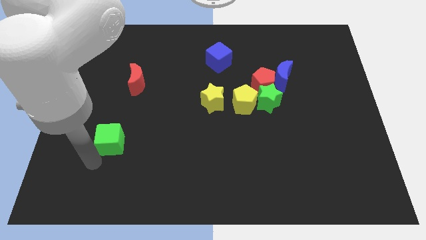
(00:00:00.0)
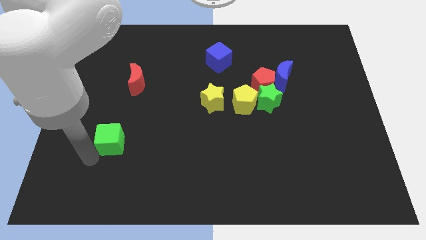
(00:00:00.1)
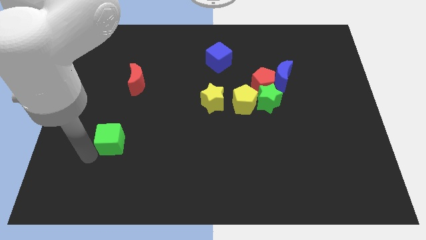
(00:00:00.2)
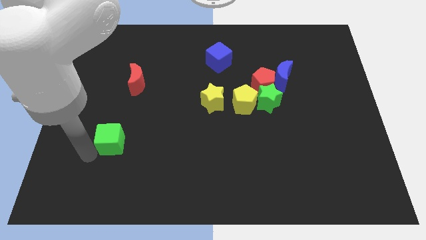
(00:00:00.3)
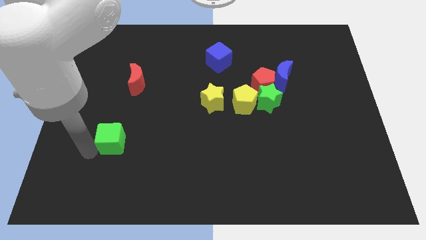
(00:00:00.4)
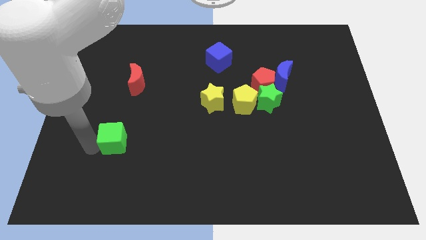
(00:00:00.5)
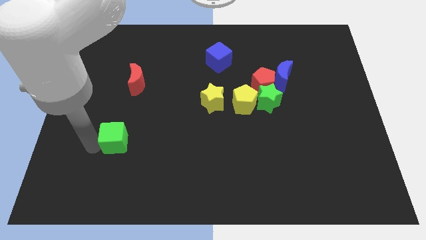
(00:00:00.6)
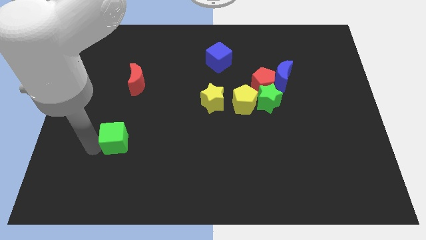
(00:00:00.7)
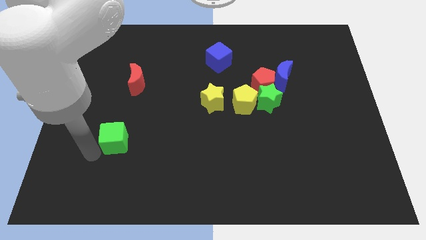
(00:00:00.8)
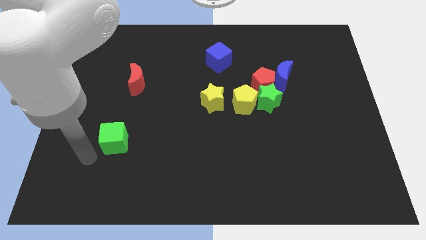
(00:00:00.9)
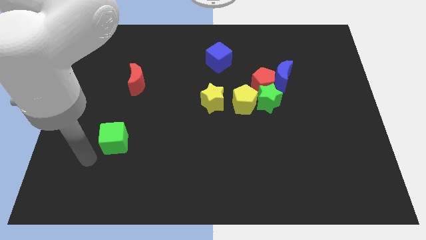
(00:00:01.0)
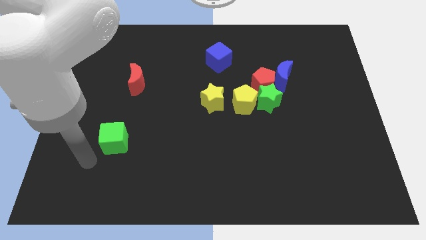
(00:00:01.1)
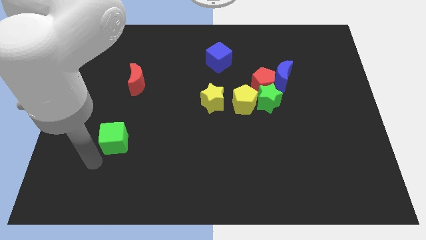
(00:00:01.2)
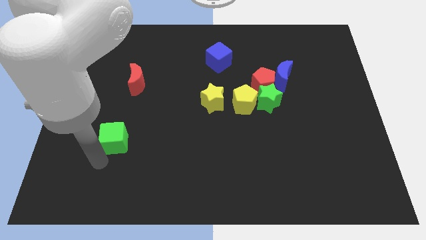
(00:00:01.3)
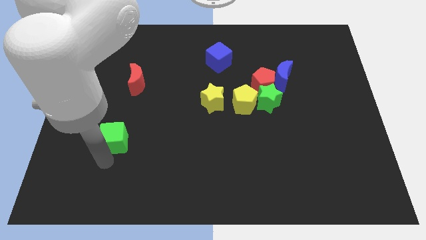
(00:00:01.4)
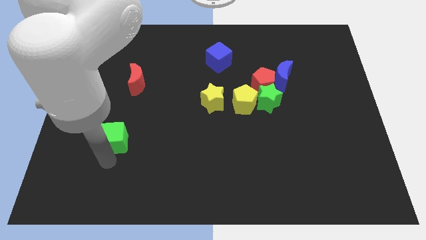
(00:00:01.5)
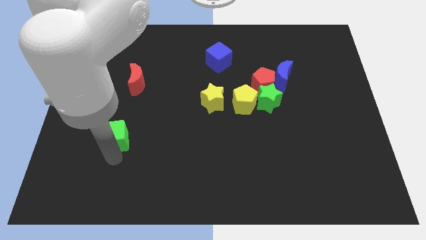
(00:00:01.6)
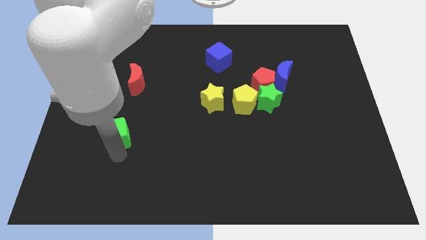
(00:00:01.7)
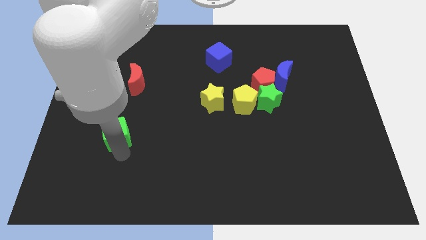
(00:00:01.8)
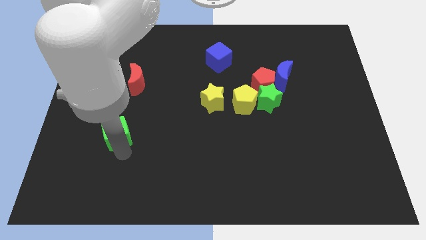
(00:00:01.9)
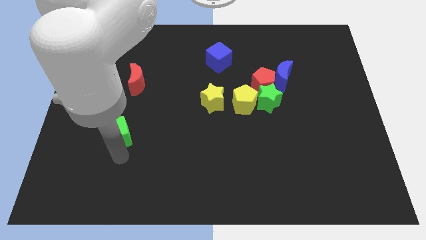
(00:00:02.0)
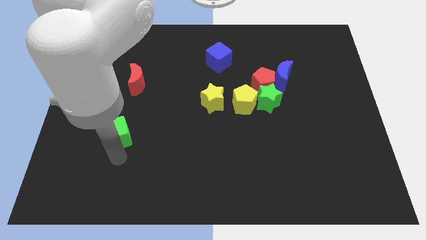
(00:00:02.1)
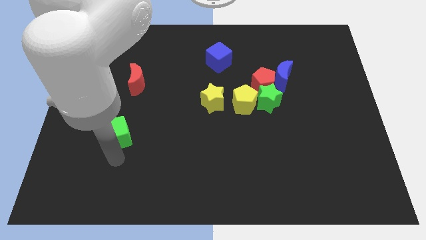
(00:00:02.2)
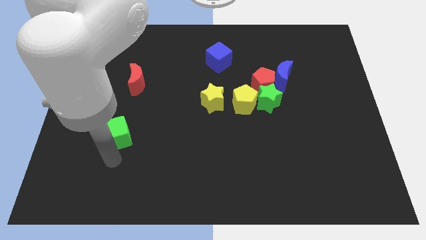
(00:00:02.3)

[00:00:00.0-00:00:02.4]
move the green cube slightly up

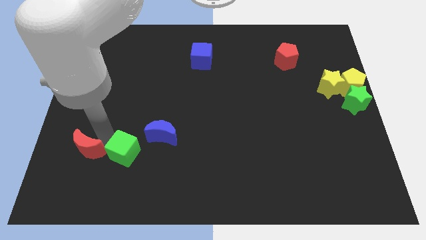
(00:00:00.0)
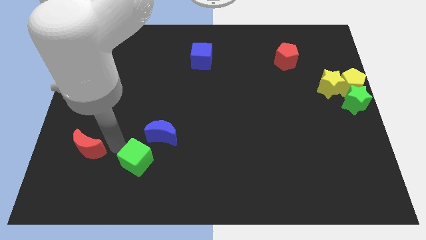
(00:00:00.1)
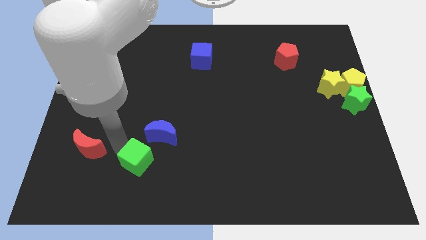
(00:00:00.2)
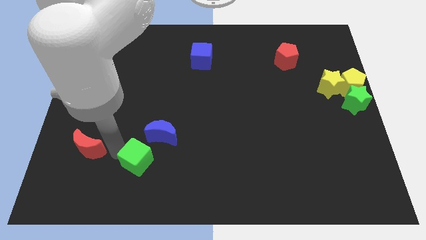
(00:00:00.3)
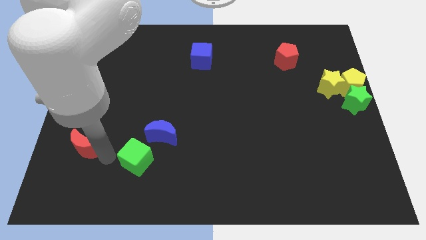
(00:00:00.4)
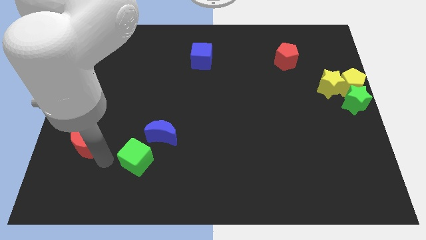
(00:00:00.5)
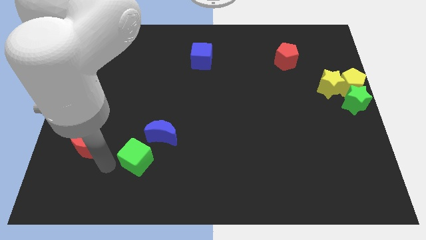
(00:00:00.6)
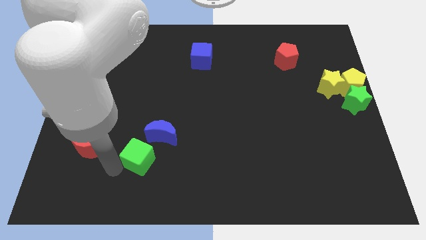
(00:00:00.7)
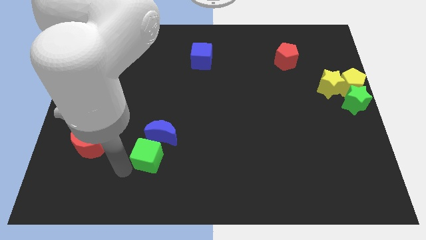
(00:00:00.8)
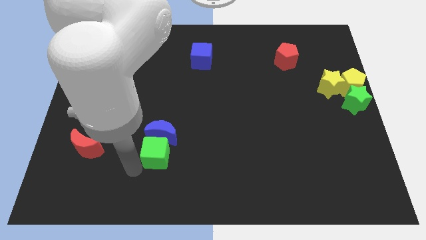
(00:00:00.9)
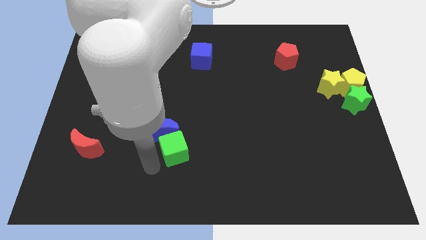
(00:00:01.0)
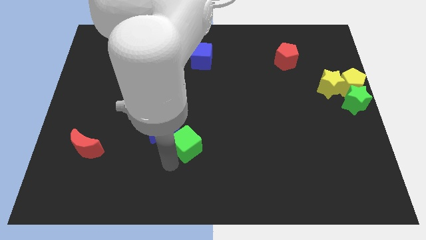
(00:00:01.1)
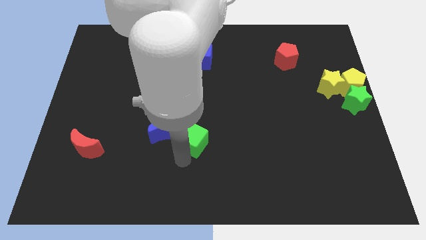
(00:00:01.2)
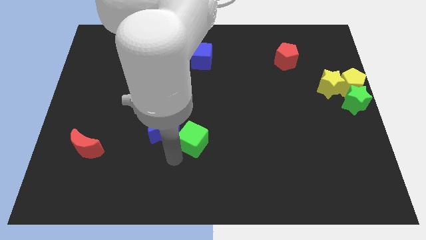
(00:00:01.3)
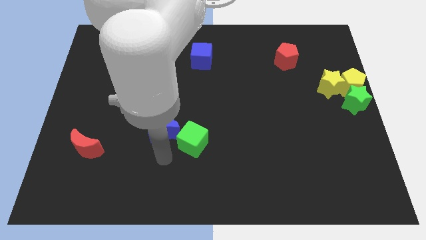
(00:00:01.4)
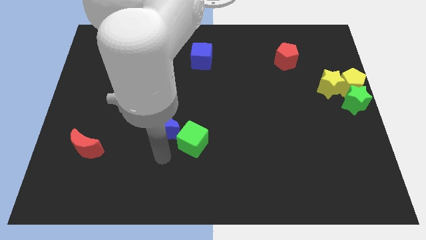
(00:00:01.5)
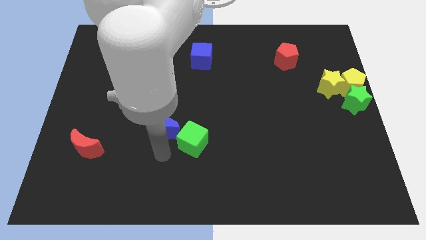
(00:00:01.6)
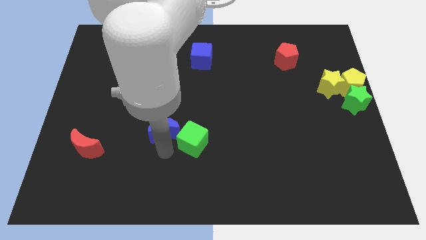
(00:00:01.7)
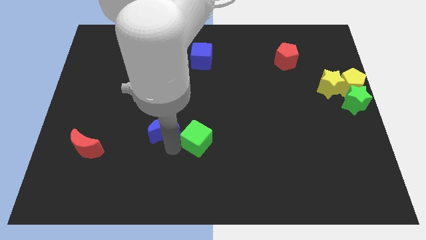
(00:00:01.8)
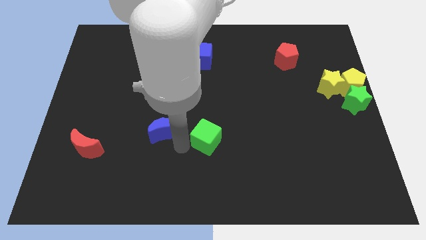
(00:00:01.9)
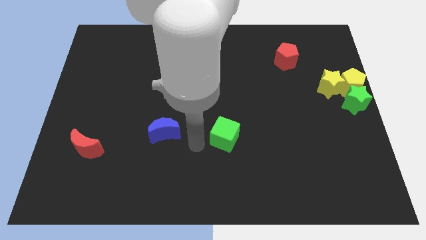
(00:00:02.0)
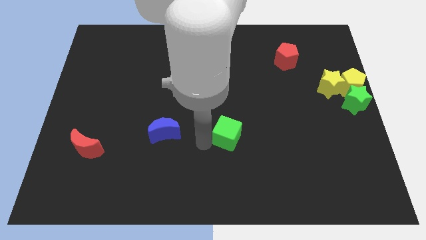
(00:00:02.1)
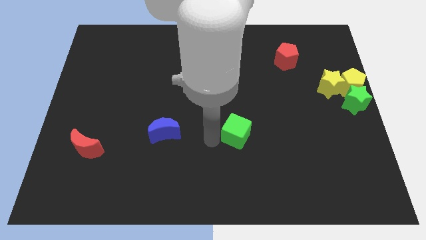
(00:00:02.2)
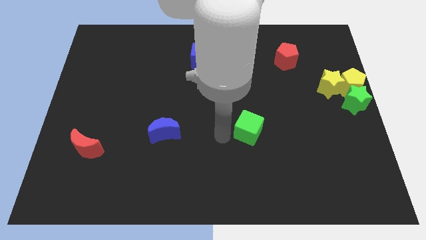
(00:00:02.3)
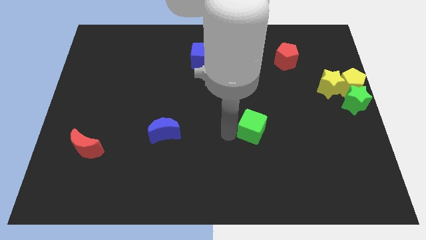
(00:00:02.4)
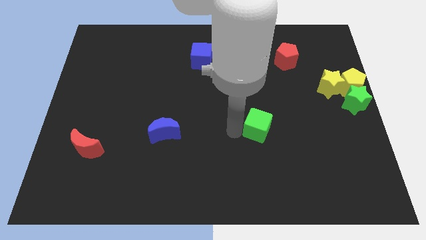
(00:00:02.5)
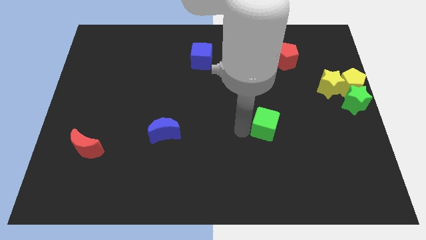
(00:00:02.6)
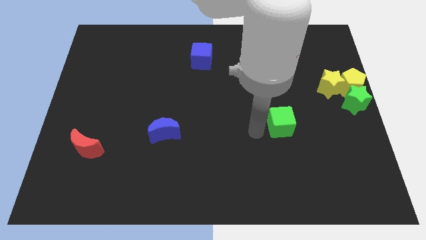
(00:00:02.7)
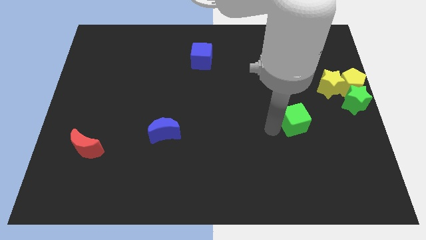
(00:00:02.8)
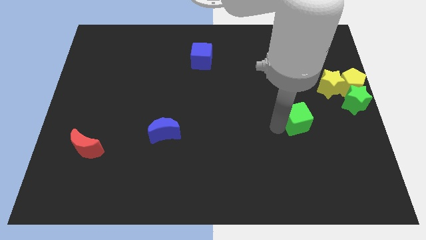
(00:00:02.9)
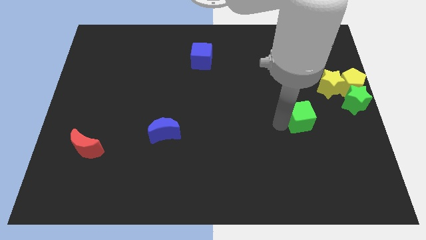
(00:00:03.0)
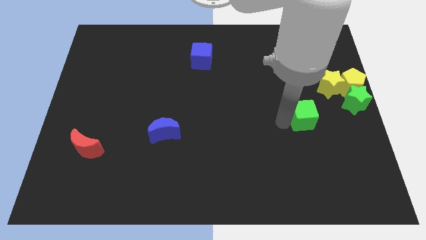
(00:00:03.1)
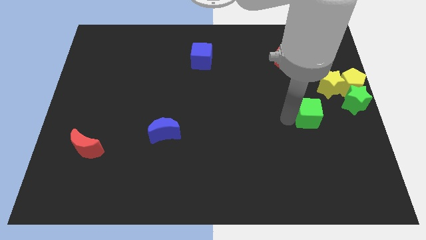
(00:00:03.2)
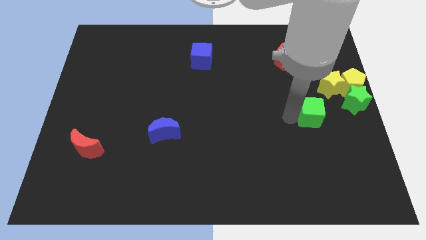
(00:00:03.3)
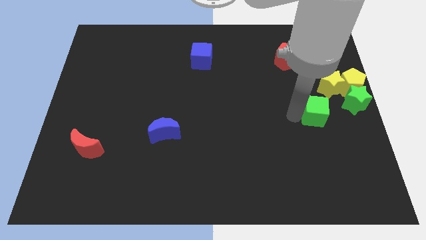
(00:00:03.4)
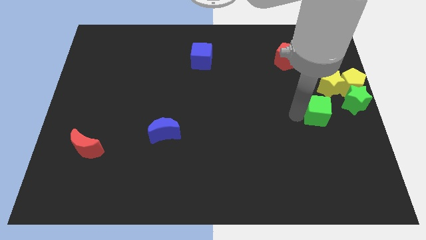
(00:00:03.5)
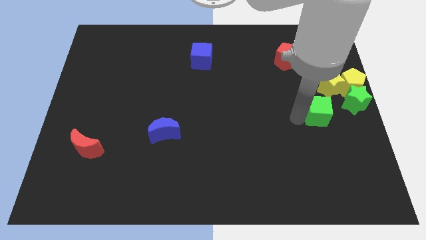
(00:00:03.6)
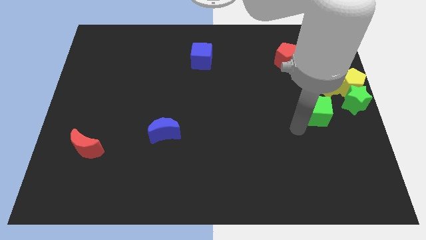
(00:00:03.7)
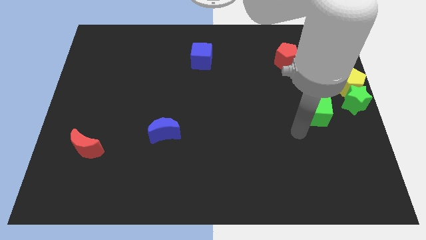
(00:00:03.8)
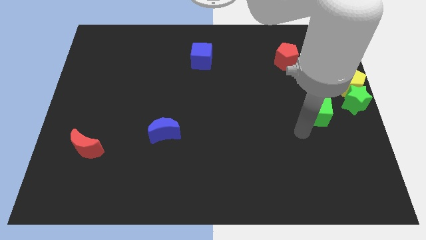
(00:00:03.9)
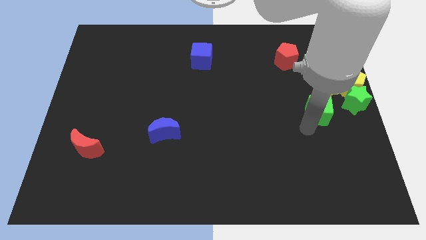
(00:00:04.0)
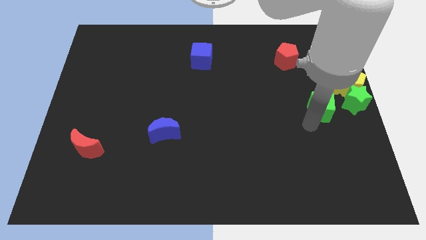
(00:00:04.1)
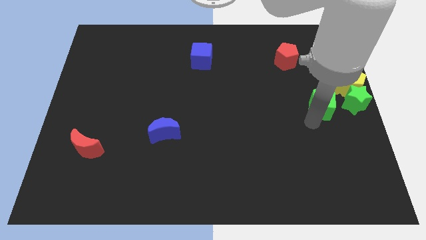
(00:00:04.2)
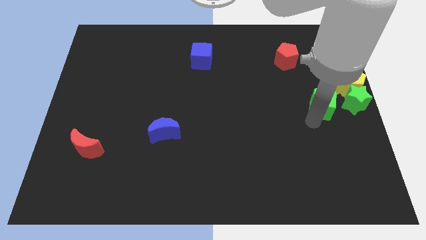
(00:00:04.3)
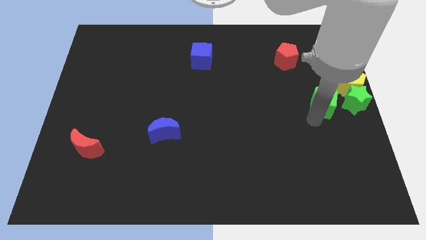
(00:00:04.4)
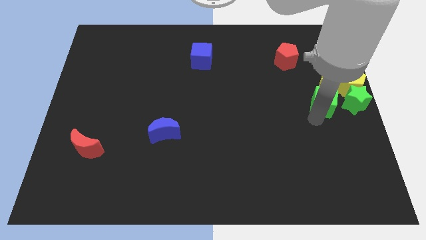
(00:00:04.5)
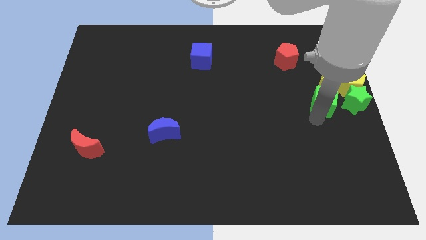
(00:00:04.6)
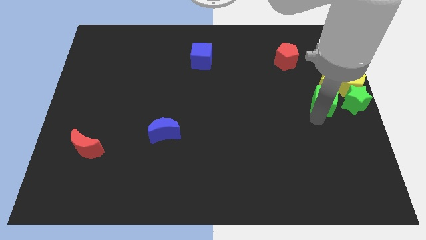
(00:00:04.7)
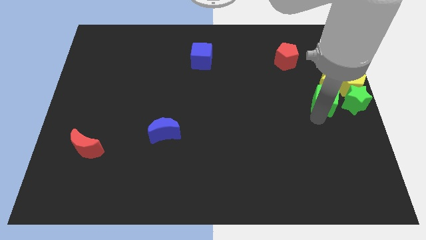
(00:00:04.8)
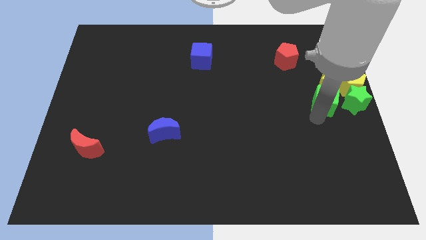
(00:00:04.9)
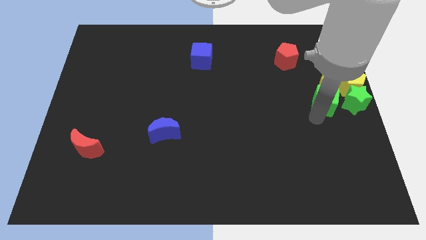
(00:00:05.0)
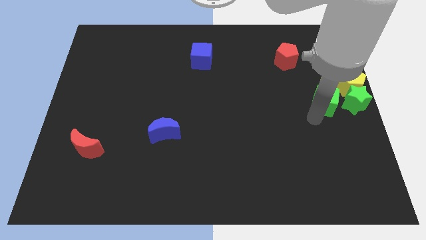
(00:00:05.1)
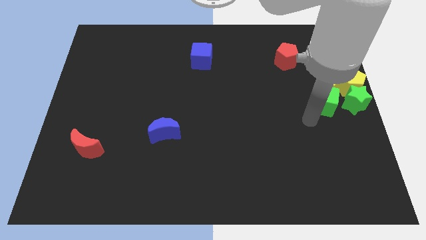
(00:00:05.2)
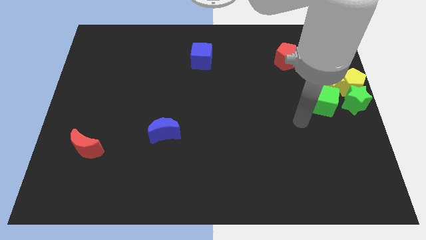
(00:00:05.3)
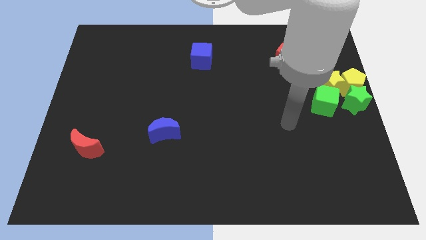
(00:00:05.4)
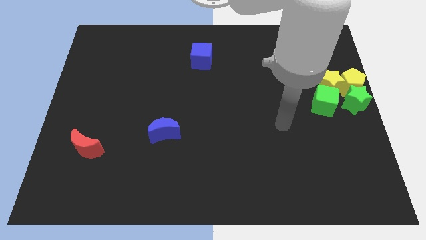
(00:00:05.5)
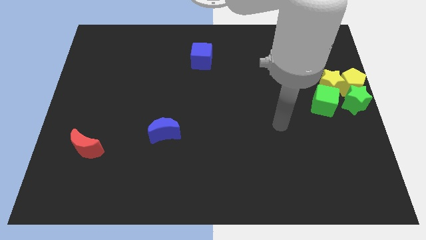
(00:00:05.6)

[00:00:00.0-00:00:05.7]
push the green cube towards the right center of the board

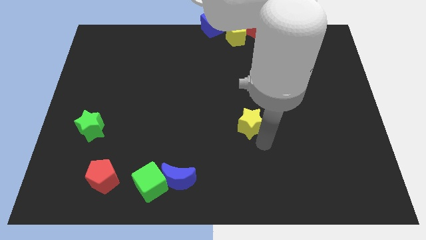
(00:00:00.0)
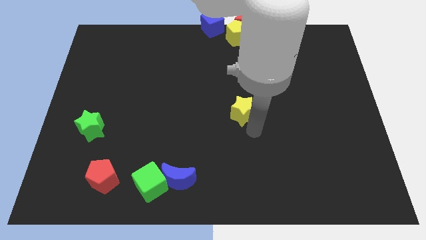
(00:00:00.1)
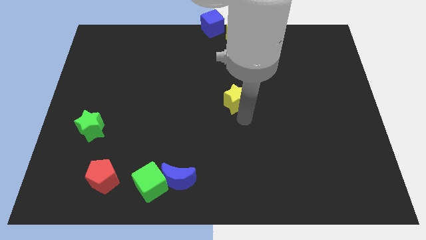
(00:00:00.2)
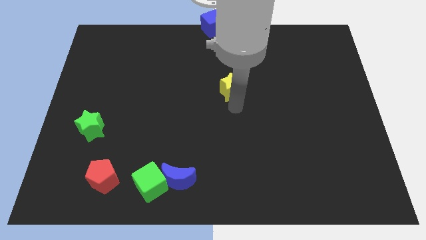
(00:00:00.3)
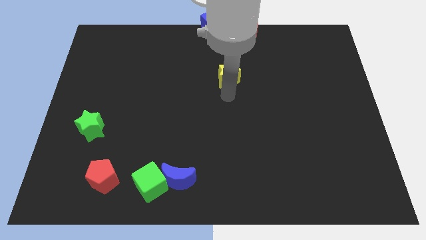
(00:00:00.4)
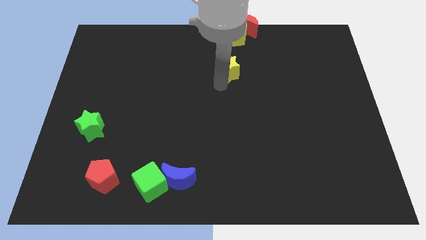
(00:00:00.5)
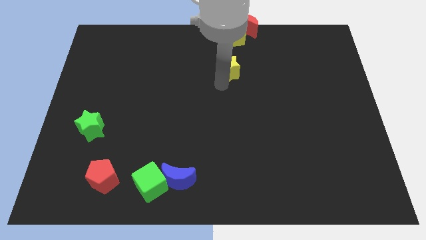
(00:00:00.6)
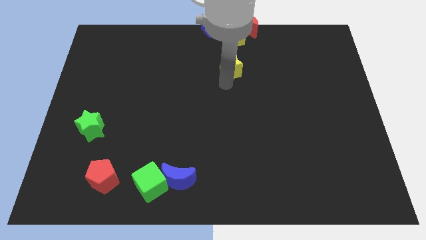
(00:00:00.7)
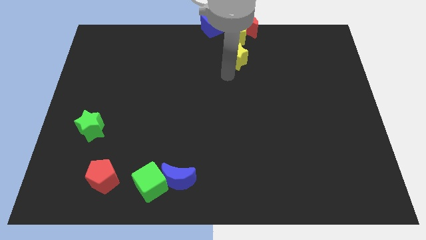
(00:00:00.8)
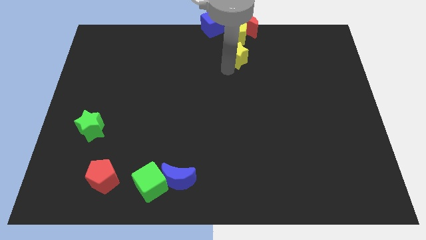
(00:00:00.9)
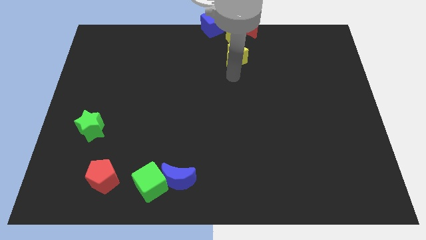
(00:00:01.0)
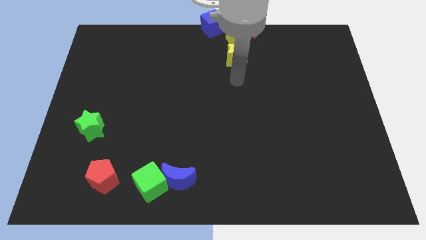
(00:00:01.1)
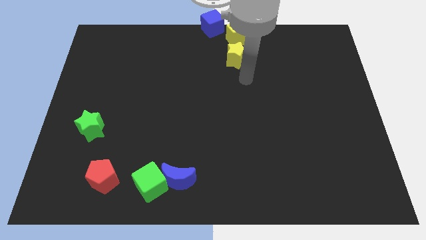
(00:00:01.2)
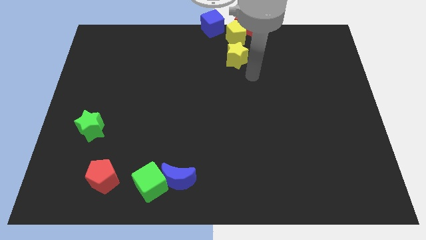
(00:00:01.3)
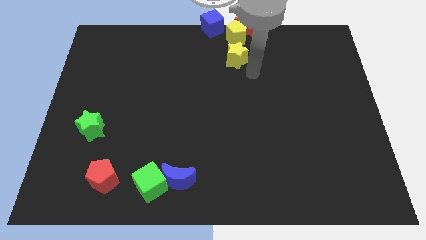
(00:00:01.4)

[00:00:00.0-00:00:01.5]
move the yellow star below the yellow star
